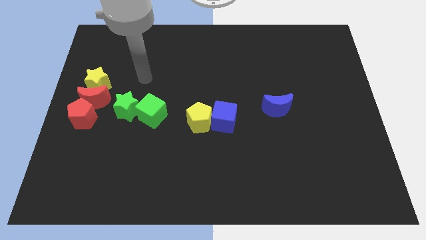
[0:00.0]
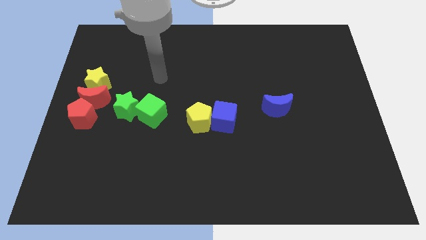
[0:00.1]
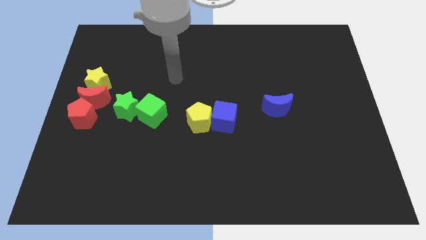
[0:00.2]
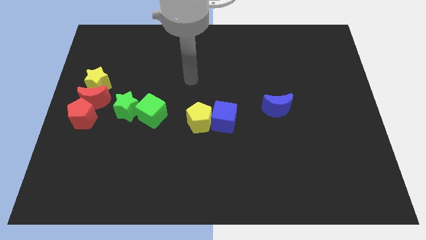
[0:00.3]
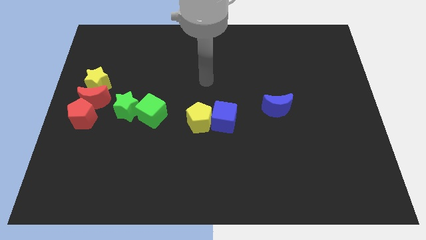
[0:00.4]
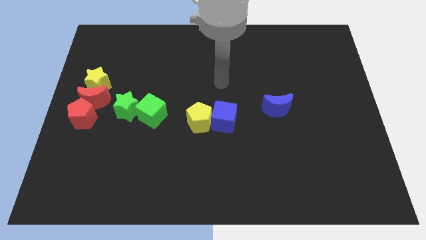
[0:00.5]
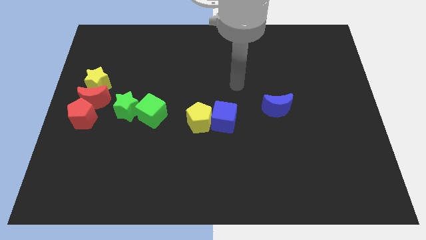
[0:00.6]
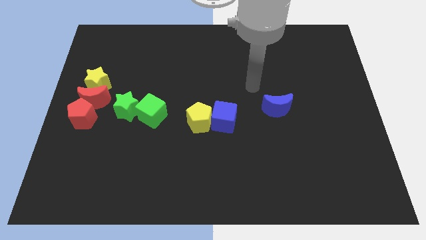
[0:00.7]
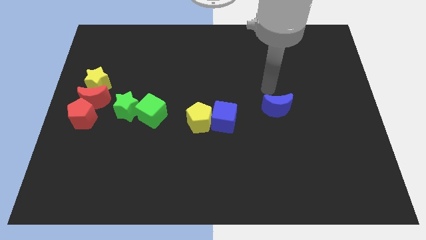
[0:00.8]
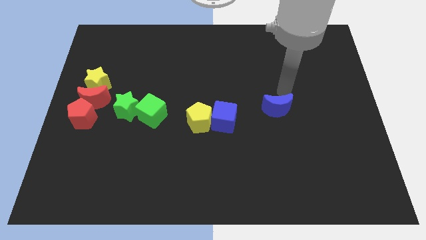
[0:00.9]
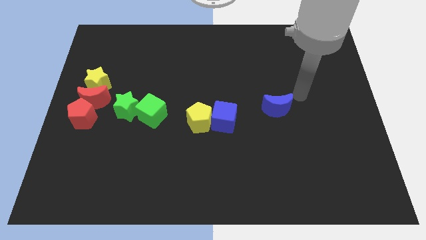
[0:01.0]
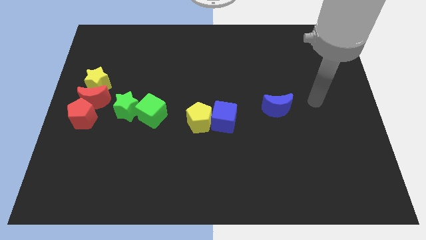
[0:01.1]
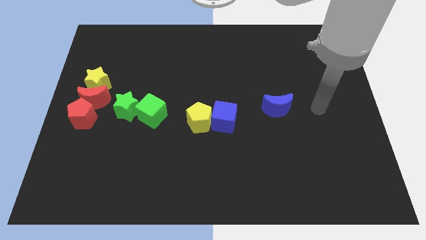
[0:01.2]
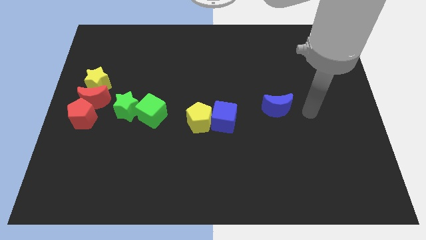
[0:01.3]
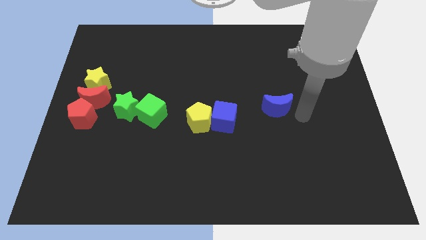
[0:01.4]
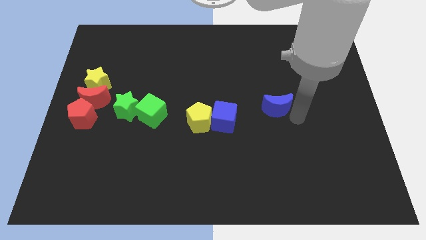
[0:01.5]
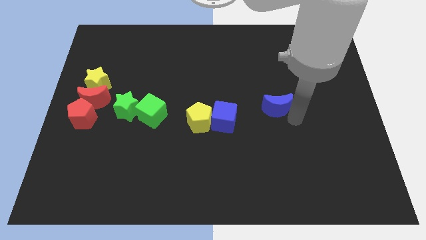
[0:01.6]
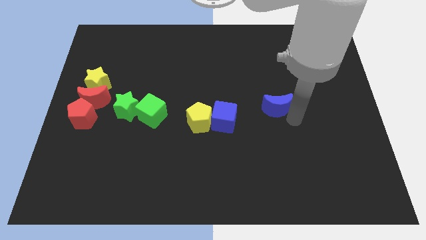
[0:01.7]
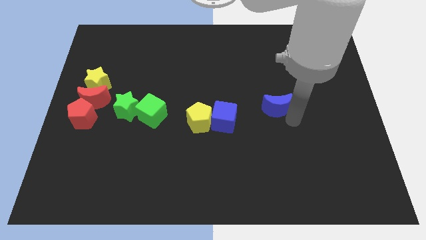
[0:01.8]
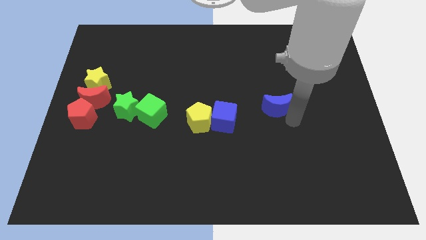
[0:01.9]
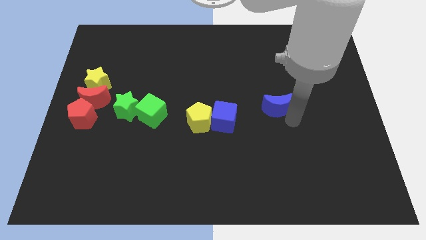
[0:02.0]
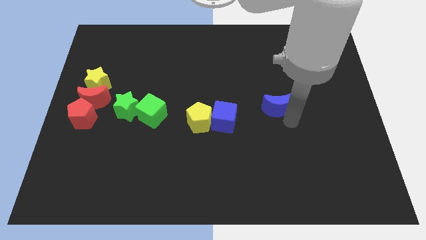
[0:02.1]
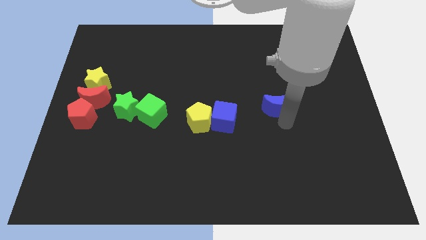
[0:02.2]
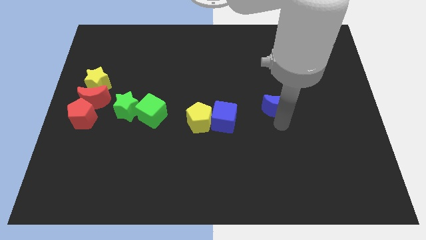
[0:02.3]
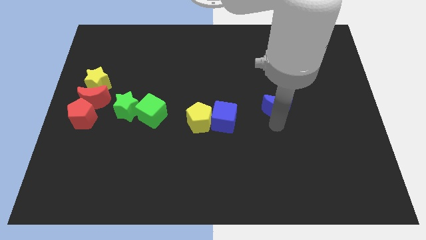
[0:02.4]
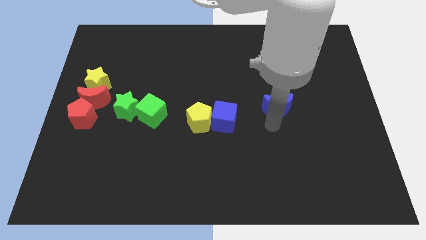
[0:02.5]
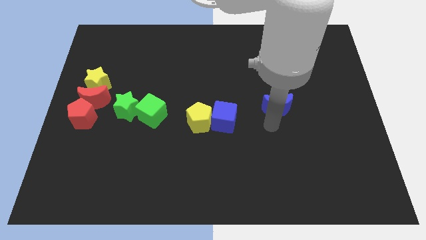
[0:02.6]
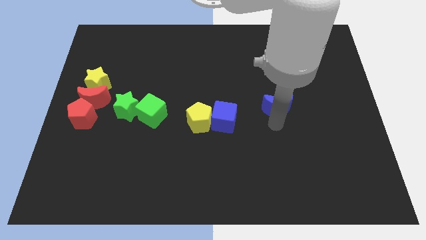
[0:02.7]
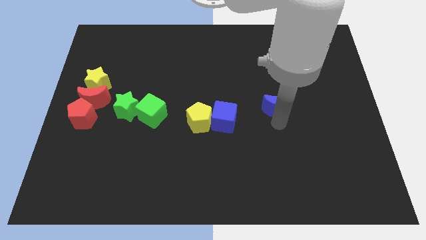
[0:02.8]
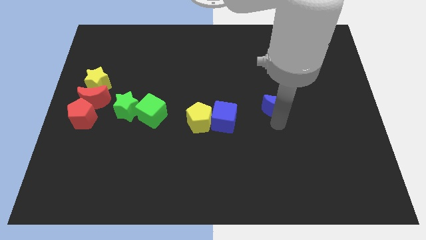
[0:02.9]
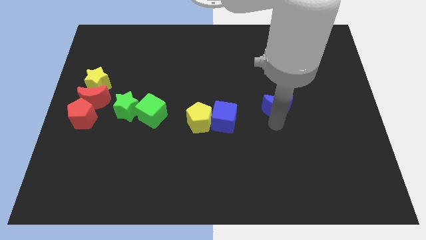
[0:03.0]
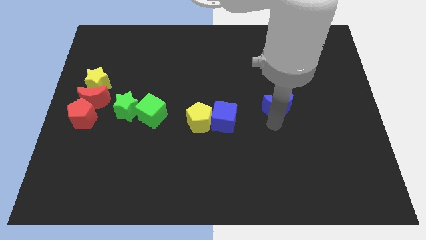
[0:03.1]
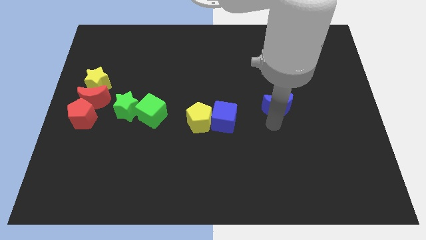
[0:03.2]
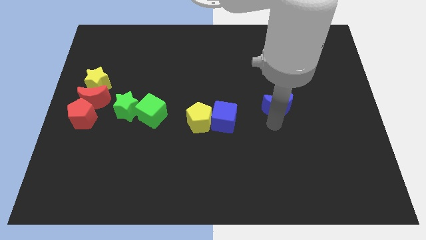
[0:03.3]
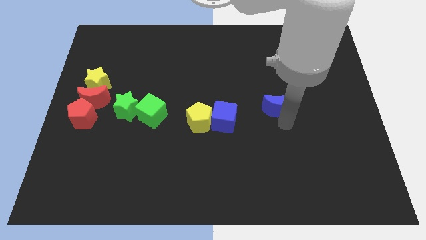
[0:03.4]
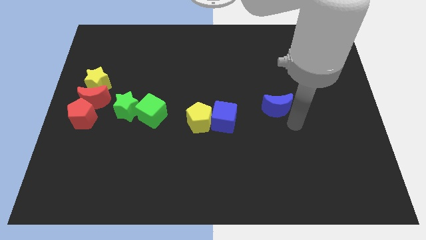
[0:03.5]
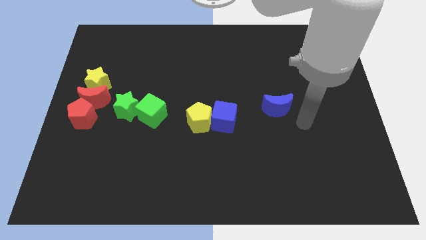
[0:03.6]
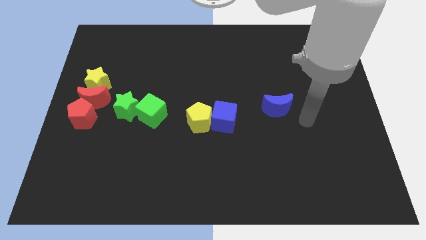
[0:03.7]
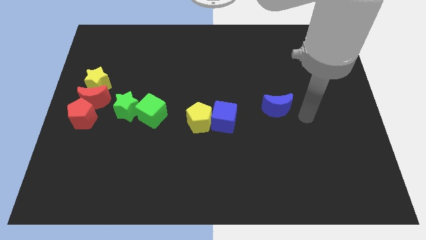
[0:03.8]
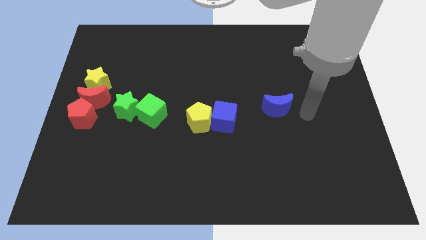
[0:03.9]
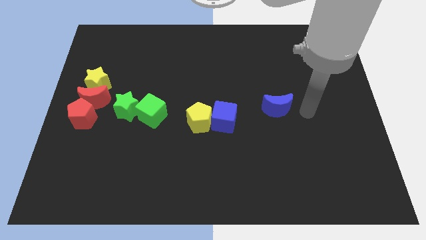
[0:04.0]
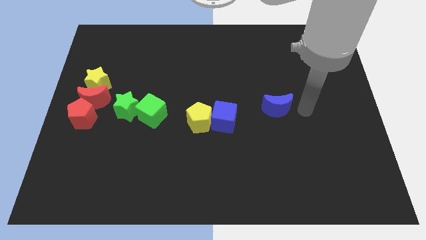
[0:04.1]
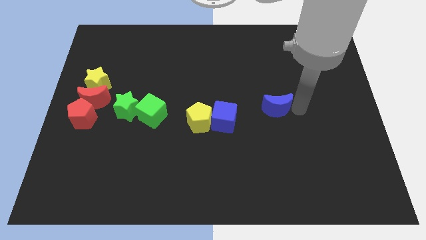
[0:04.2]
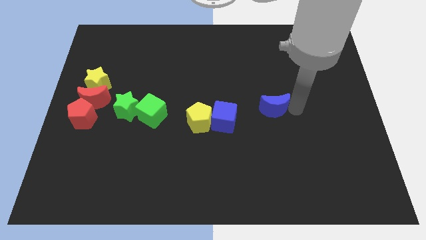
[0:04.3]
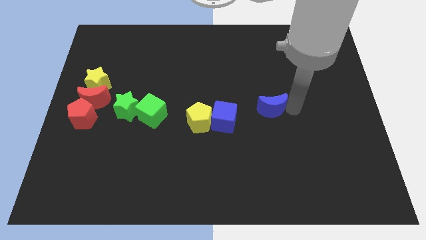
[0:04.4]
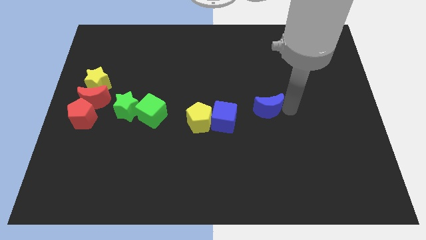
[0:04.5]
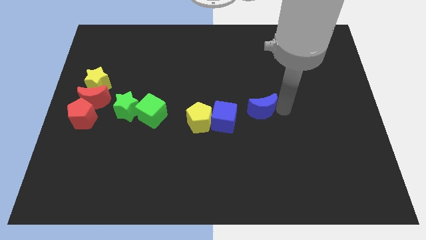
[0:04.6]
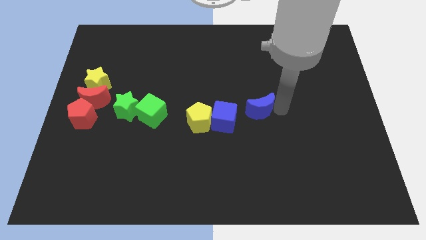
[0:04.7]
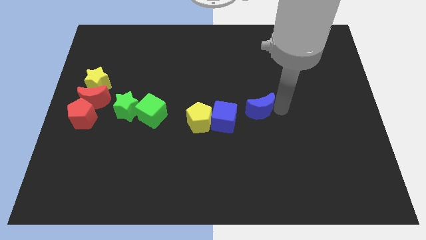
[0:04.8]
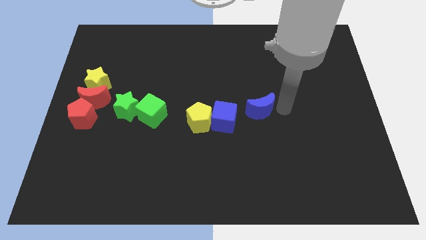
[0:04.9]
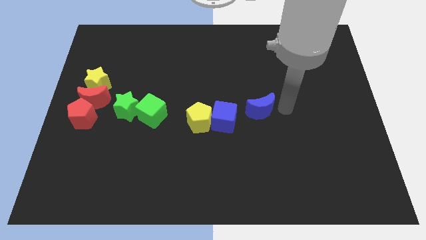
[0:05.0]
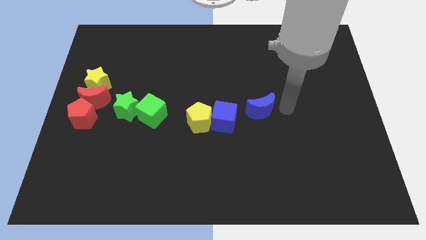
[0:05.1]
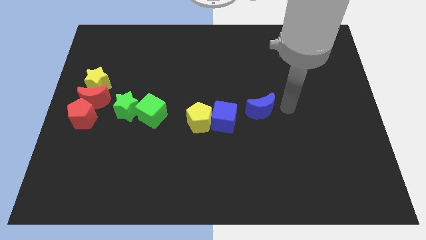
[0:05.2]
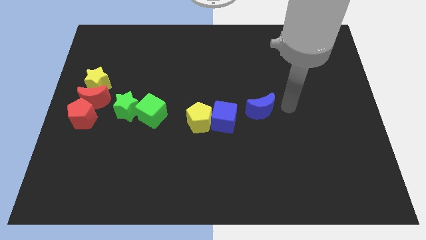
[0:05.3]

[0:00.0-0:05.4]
slightly move the blue crescent to the right of the blue cube

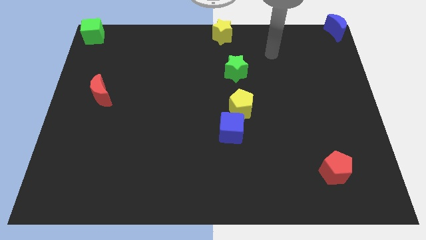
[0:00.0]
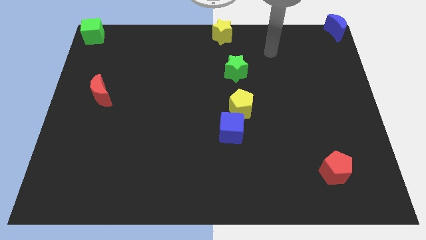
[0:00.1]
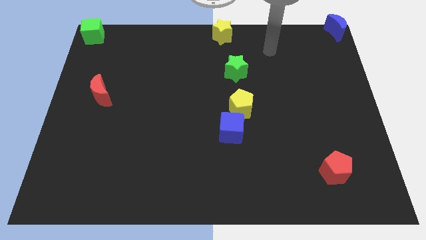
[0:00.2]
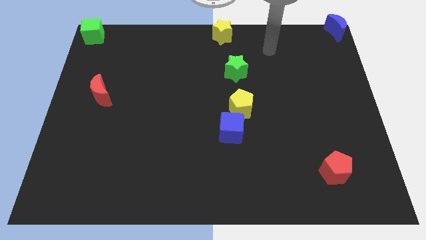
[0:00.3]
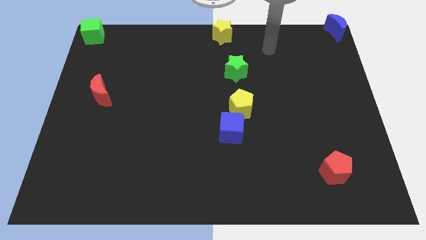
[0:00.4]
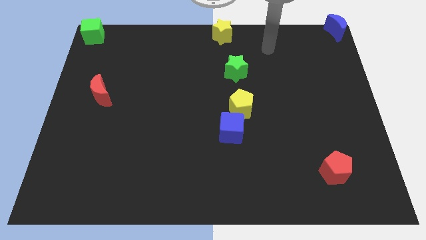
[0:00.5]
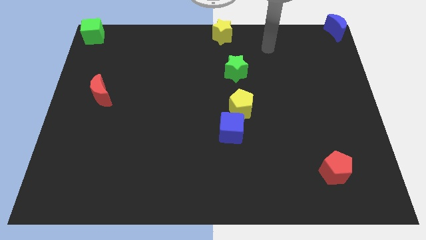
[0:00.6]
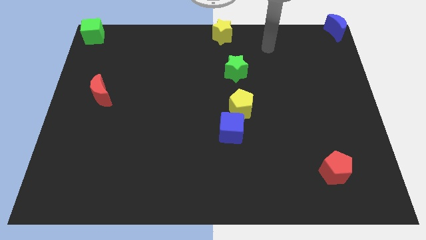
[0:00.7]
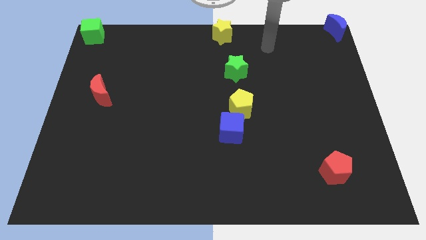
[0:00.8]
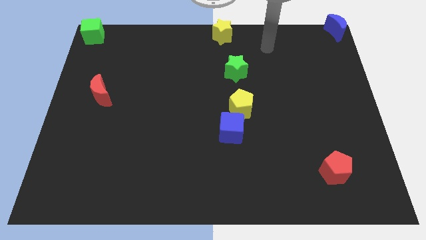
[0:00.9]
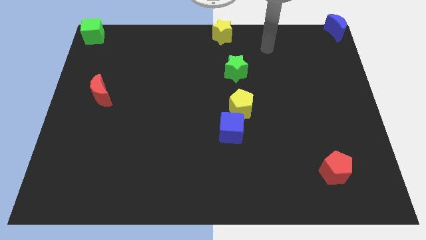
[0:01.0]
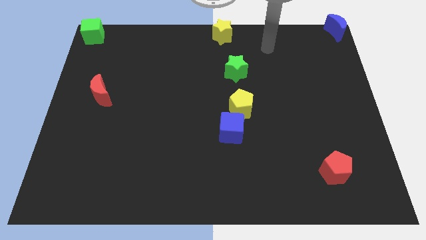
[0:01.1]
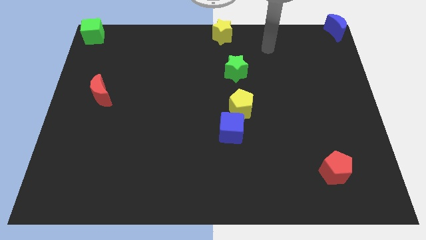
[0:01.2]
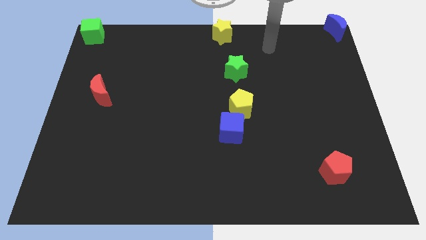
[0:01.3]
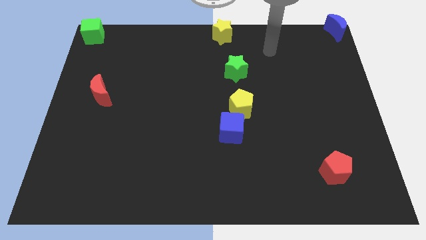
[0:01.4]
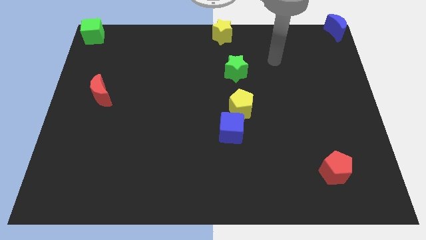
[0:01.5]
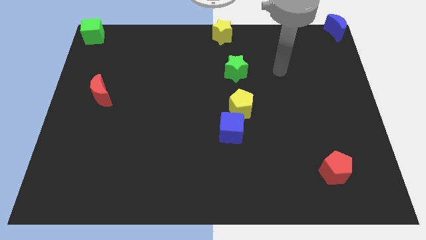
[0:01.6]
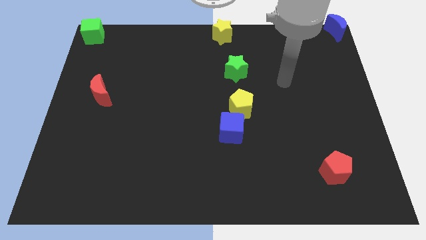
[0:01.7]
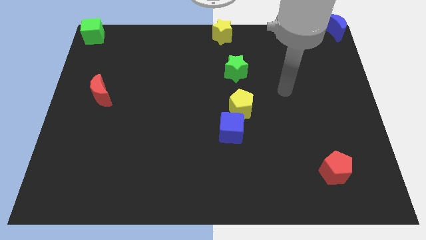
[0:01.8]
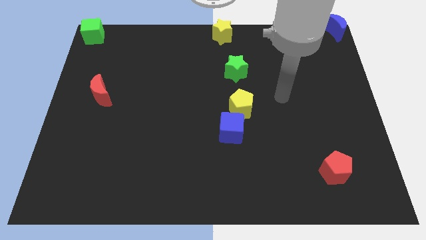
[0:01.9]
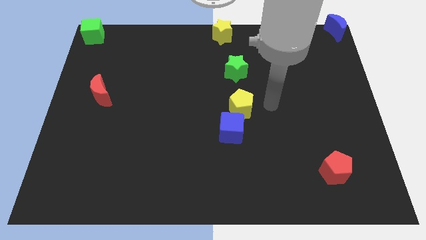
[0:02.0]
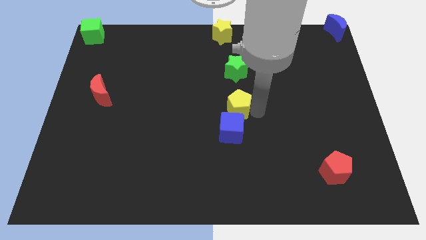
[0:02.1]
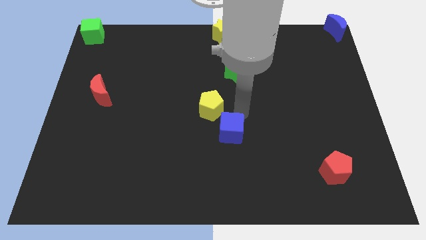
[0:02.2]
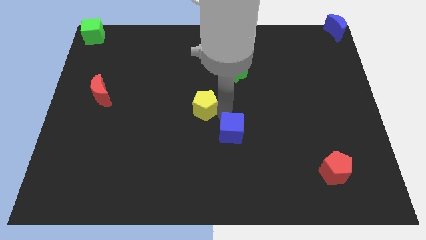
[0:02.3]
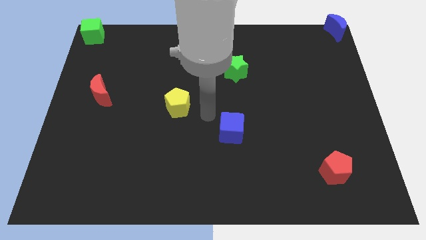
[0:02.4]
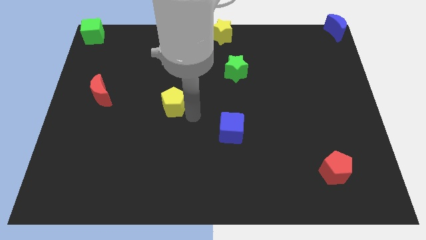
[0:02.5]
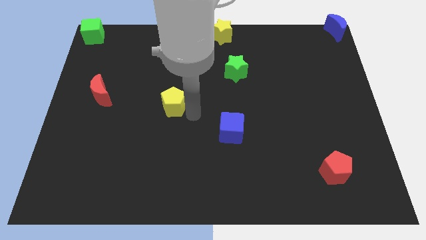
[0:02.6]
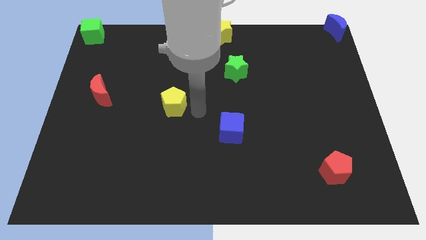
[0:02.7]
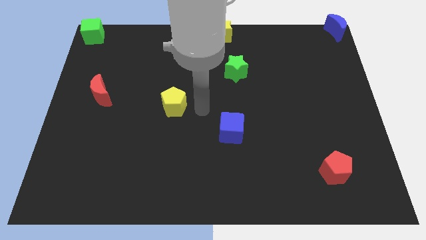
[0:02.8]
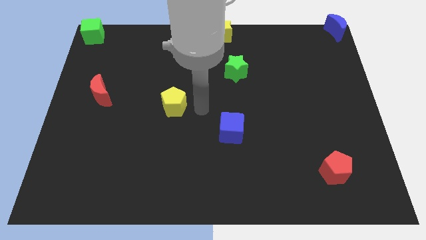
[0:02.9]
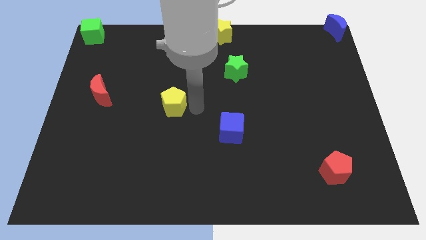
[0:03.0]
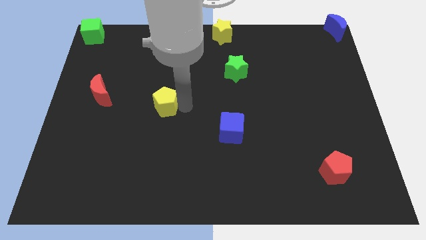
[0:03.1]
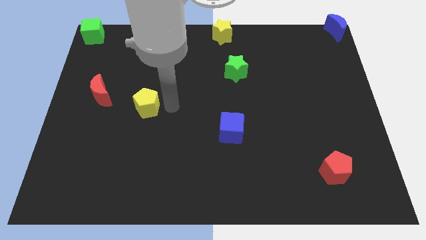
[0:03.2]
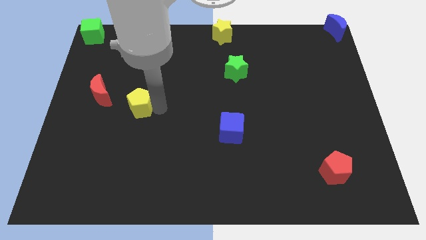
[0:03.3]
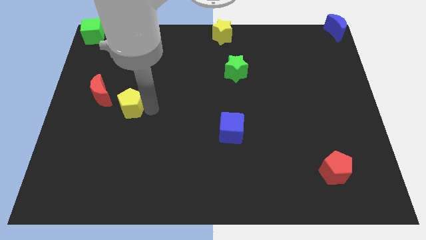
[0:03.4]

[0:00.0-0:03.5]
place the yellow pentagon bottom right to the red crescent
